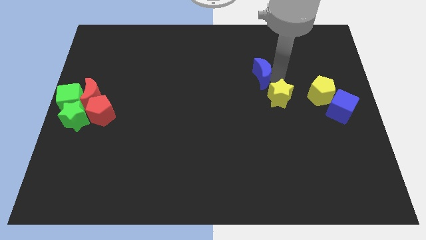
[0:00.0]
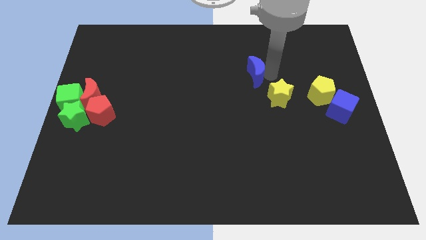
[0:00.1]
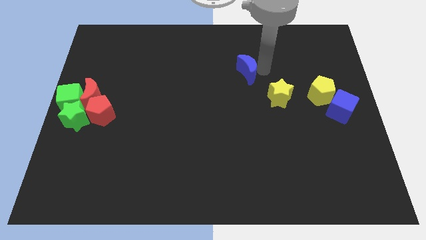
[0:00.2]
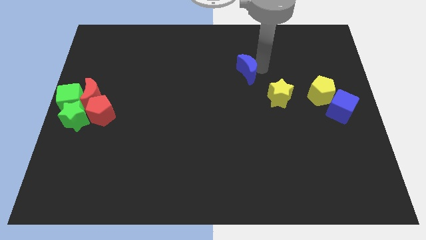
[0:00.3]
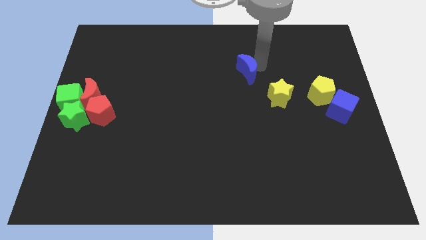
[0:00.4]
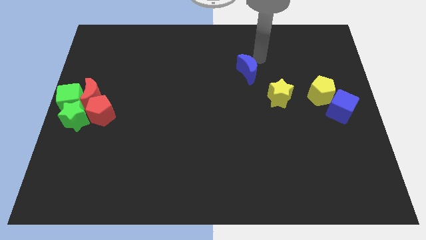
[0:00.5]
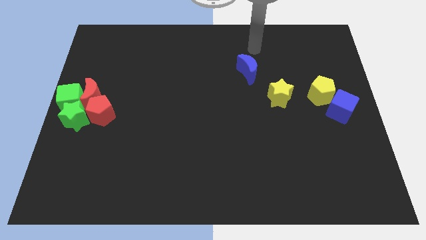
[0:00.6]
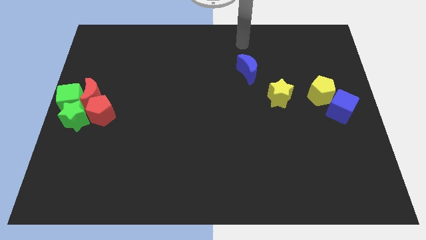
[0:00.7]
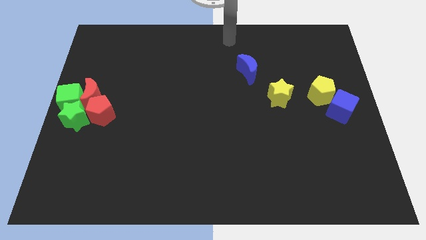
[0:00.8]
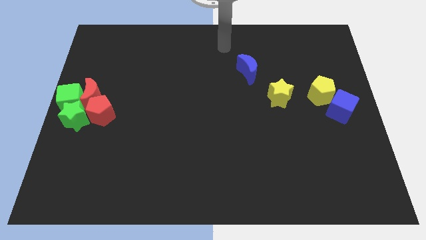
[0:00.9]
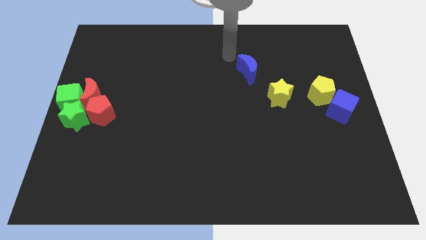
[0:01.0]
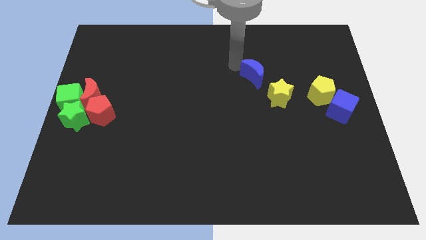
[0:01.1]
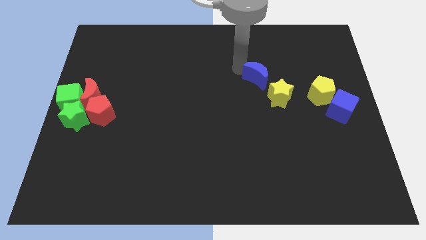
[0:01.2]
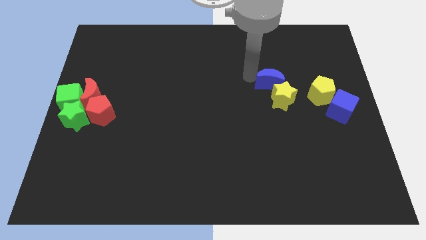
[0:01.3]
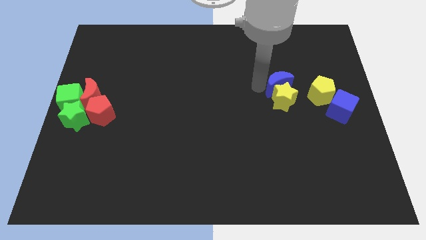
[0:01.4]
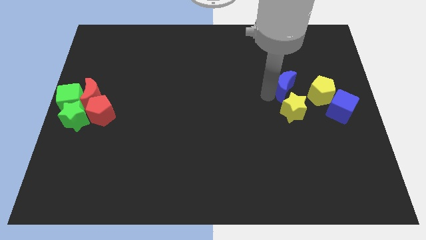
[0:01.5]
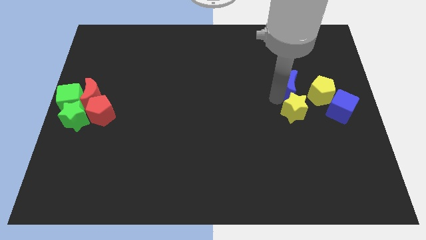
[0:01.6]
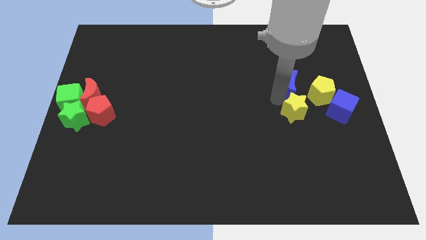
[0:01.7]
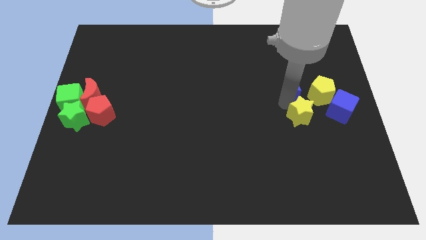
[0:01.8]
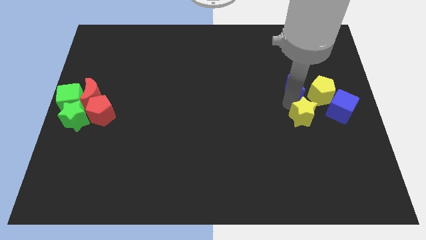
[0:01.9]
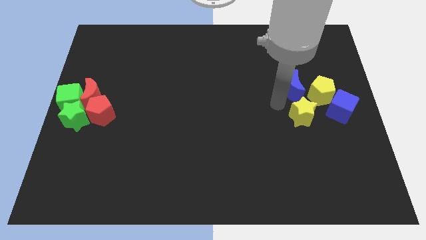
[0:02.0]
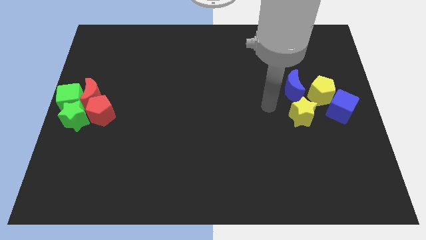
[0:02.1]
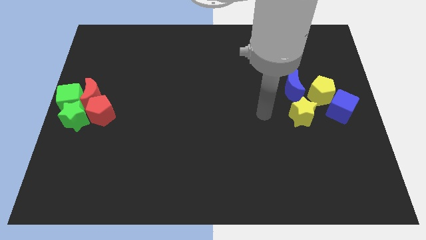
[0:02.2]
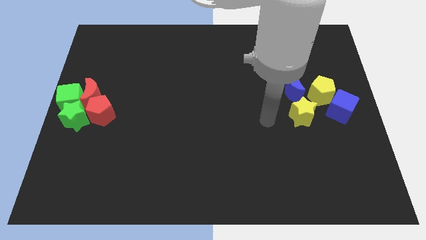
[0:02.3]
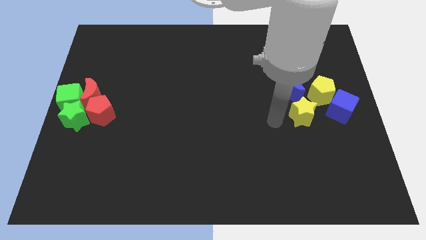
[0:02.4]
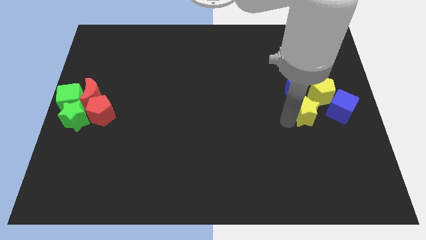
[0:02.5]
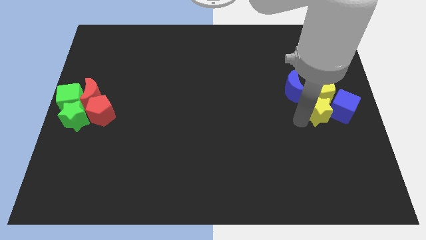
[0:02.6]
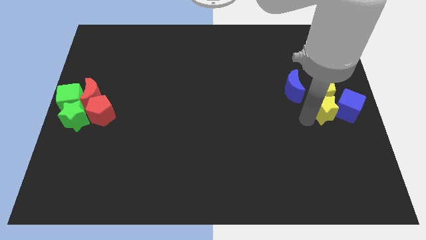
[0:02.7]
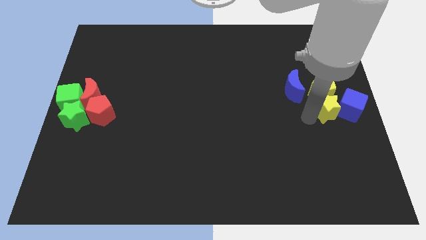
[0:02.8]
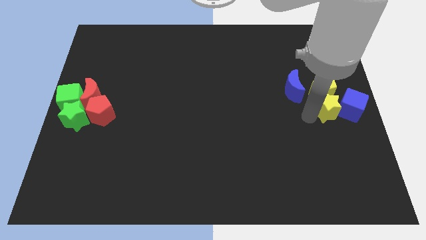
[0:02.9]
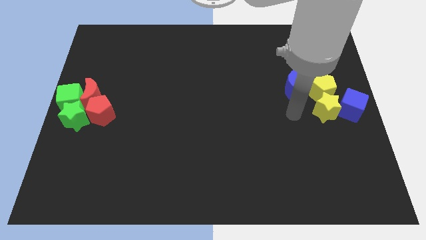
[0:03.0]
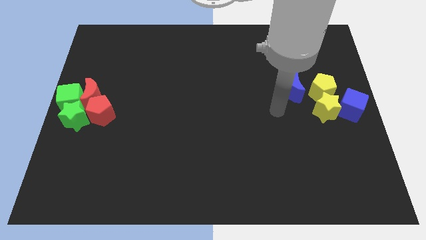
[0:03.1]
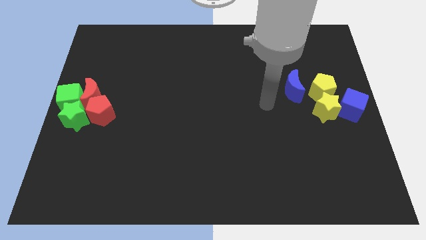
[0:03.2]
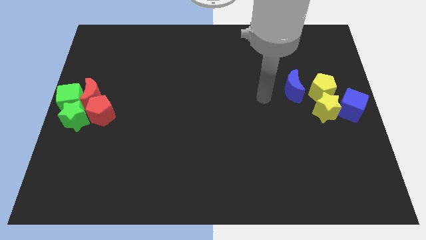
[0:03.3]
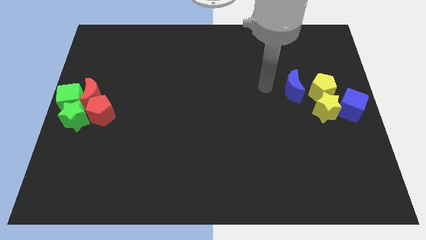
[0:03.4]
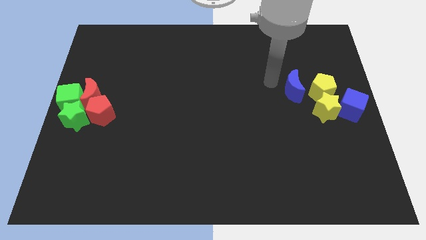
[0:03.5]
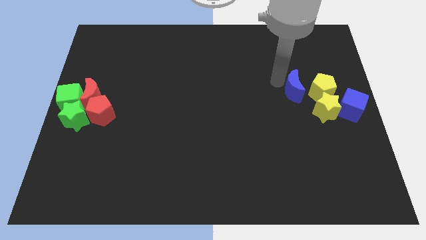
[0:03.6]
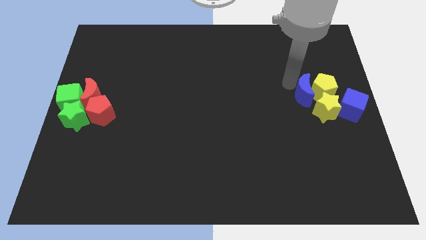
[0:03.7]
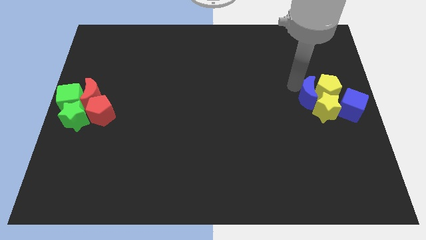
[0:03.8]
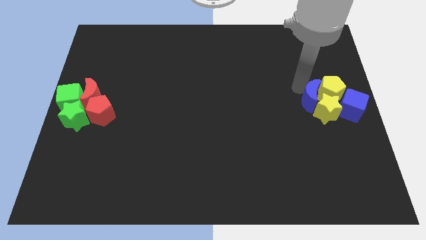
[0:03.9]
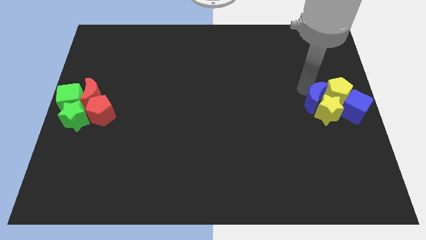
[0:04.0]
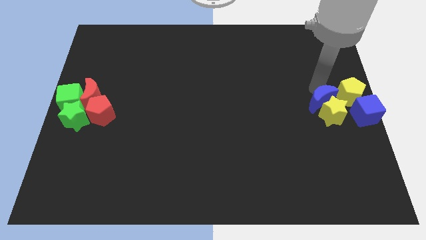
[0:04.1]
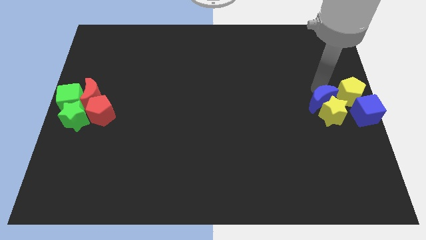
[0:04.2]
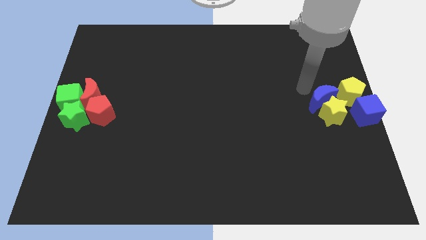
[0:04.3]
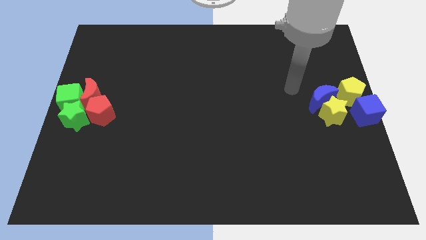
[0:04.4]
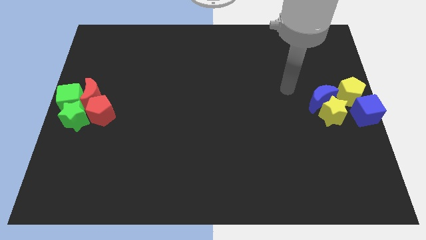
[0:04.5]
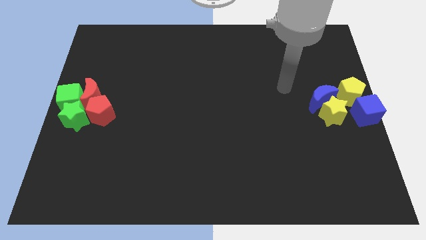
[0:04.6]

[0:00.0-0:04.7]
push a group of blocks to the right side of the board

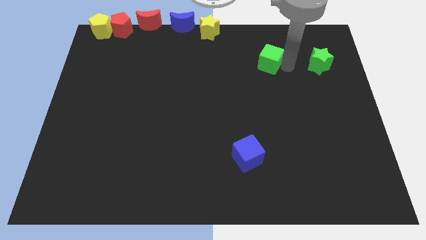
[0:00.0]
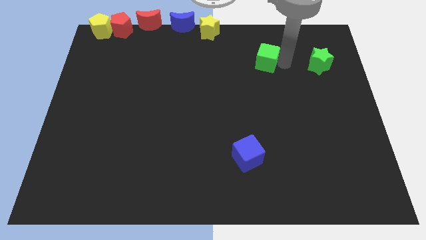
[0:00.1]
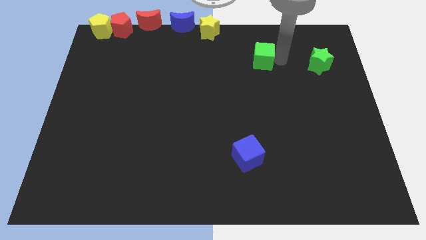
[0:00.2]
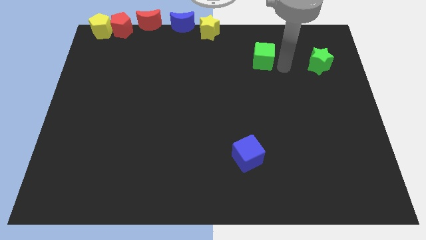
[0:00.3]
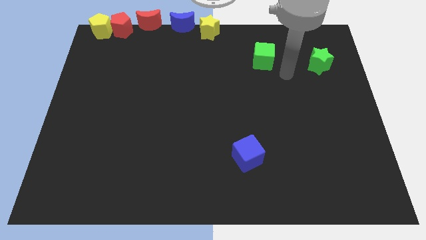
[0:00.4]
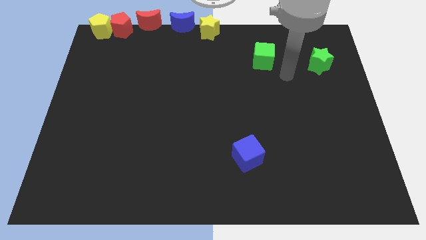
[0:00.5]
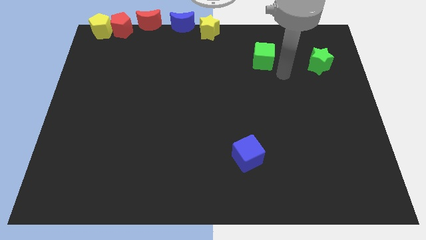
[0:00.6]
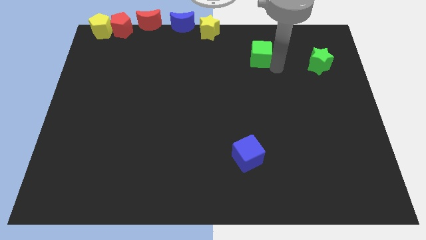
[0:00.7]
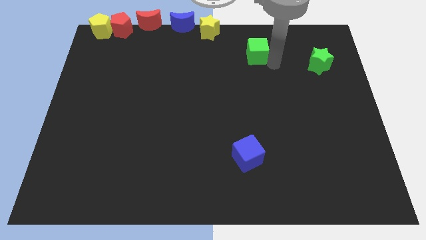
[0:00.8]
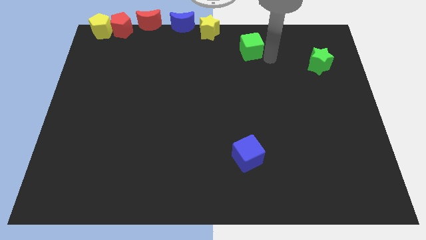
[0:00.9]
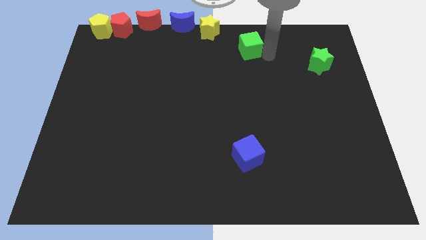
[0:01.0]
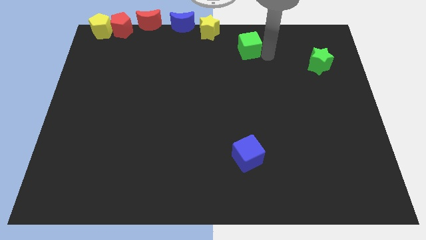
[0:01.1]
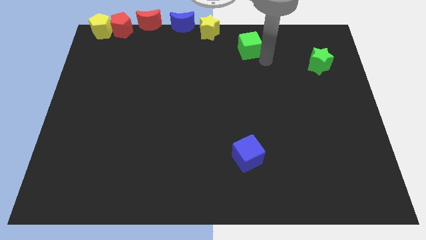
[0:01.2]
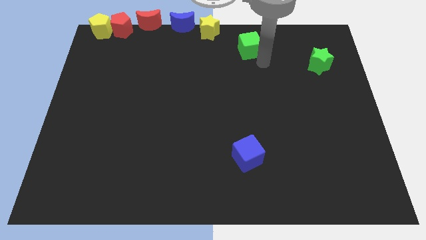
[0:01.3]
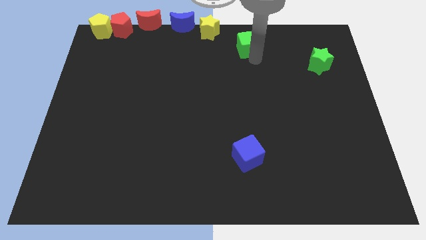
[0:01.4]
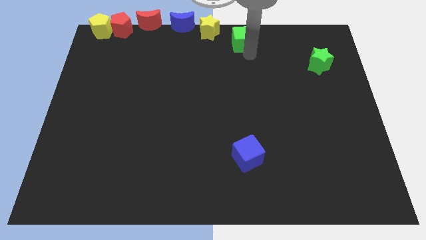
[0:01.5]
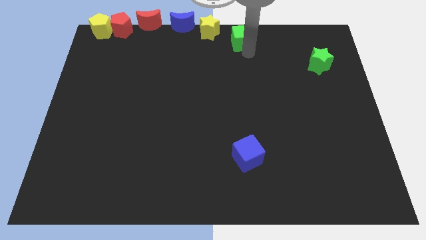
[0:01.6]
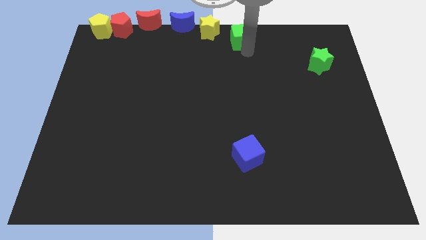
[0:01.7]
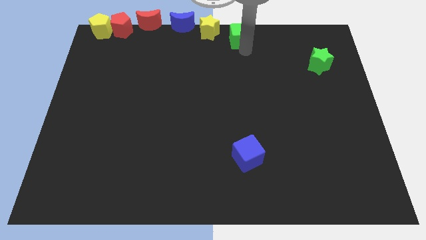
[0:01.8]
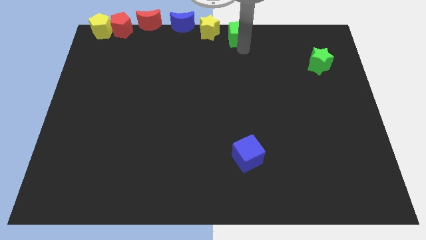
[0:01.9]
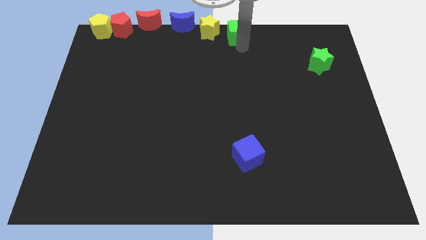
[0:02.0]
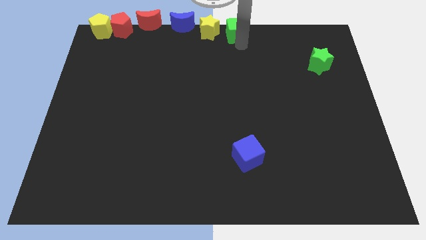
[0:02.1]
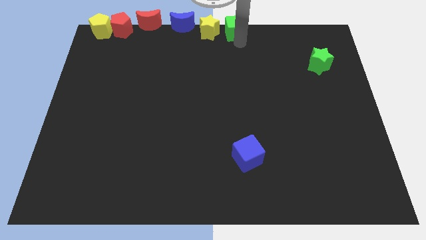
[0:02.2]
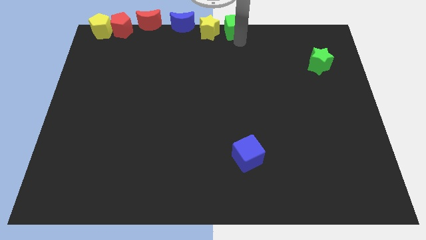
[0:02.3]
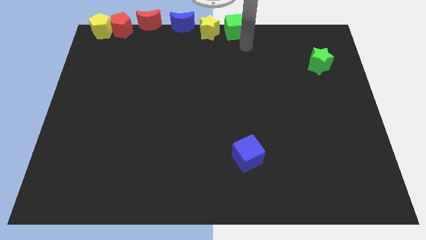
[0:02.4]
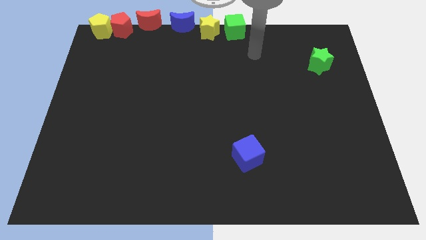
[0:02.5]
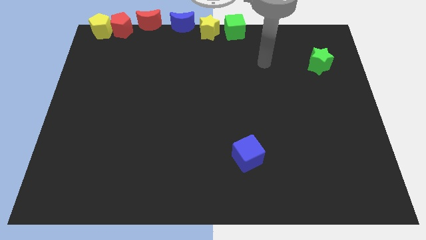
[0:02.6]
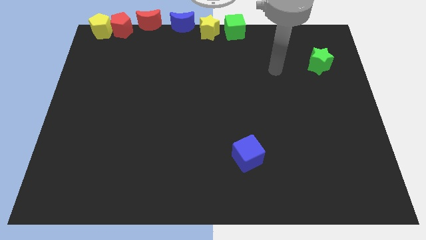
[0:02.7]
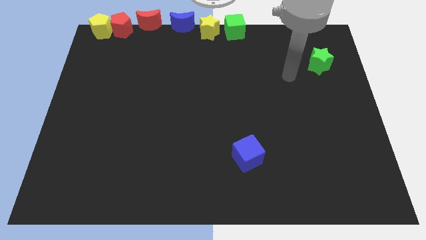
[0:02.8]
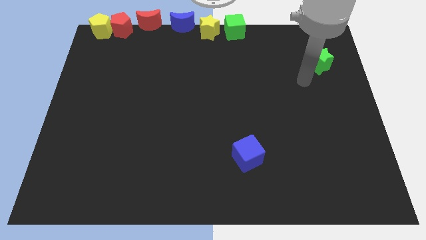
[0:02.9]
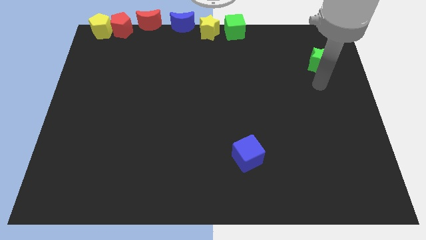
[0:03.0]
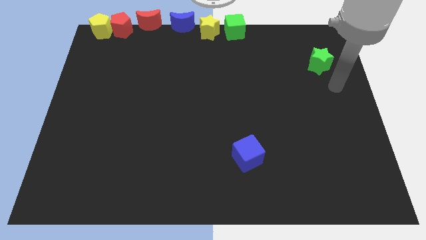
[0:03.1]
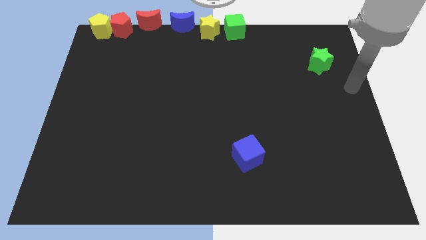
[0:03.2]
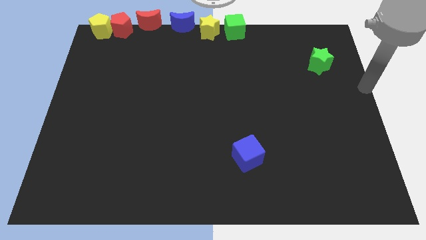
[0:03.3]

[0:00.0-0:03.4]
move the green cube to the right of the yellow star

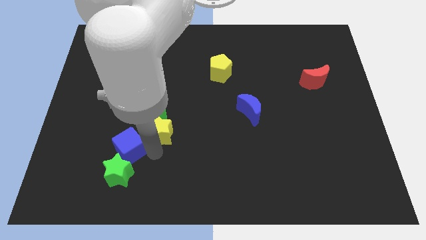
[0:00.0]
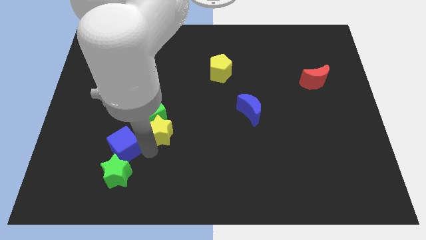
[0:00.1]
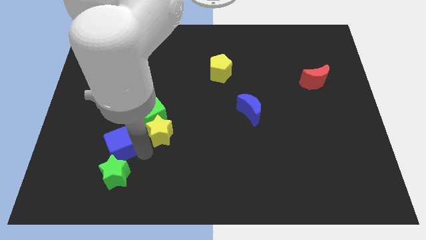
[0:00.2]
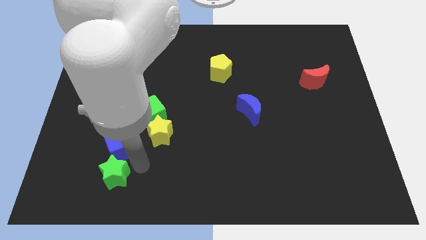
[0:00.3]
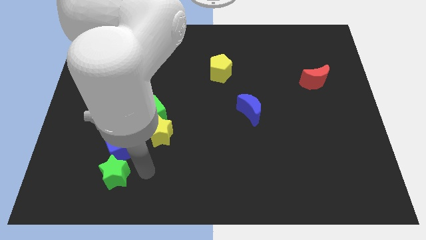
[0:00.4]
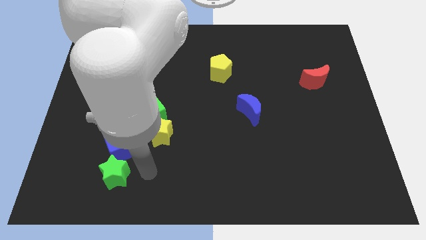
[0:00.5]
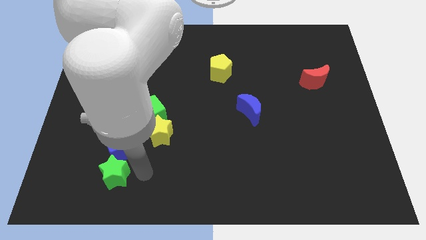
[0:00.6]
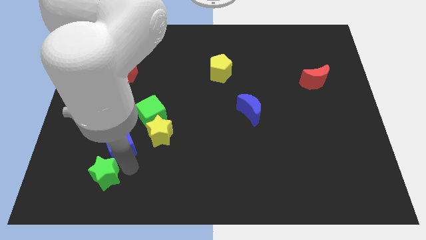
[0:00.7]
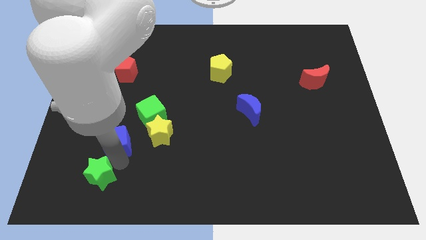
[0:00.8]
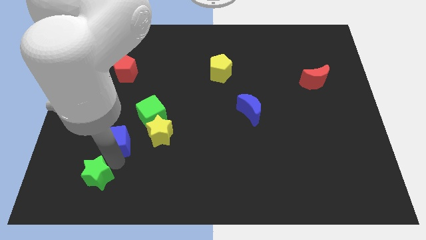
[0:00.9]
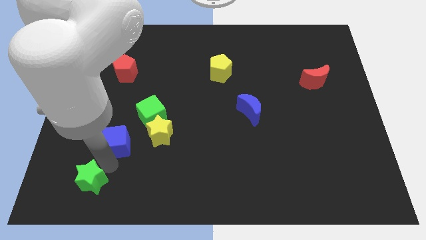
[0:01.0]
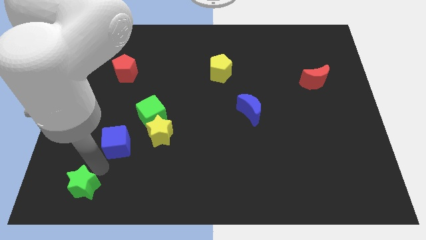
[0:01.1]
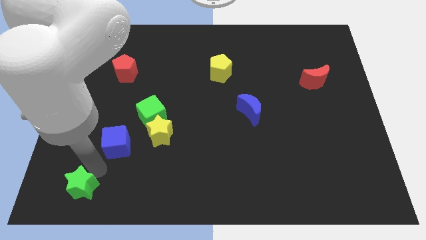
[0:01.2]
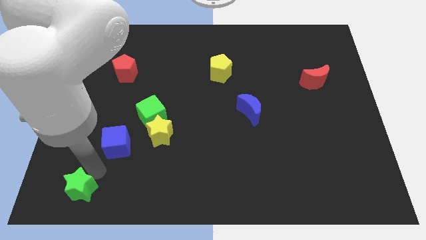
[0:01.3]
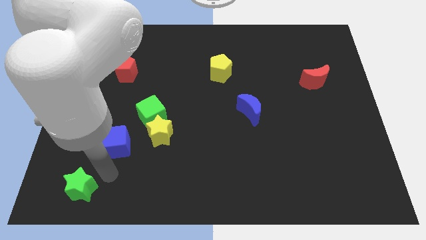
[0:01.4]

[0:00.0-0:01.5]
separate green star from blue cube
